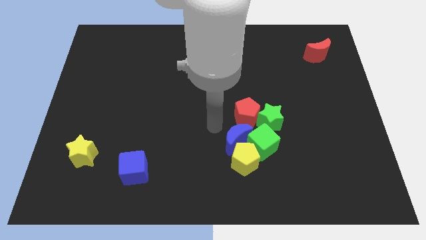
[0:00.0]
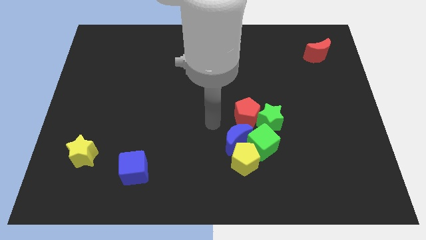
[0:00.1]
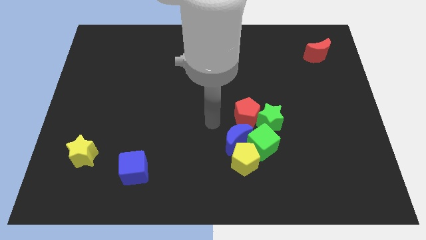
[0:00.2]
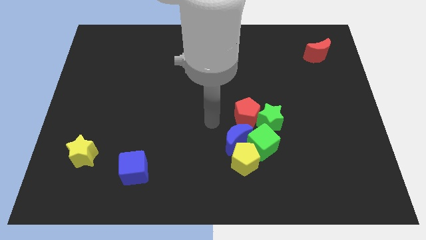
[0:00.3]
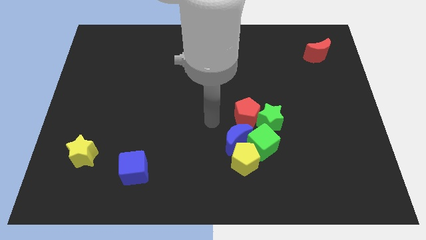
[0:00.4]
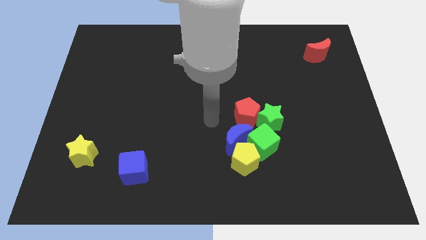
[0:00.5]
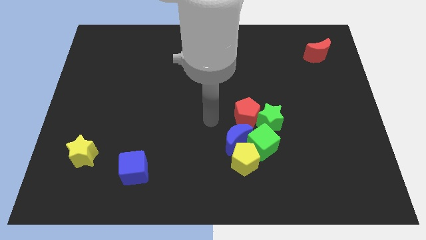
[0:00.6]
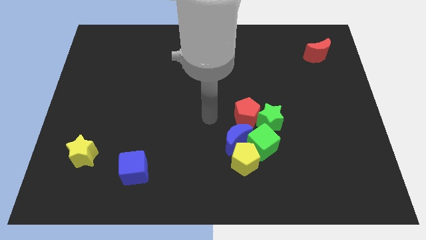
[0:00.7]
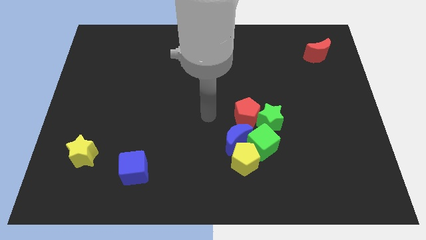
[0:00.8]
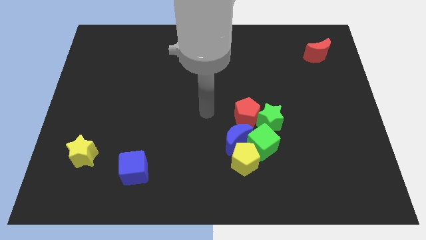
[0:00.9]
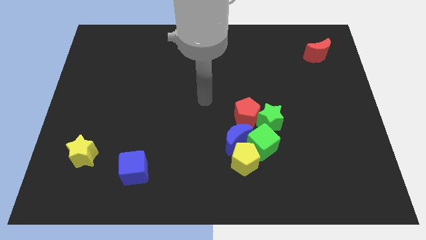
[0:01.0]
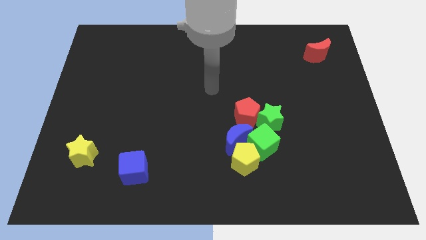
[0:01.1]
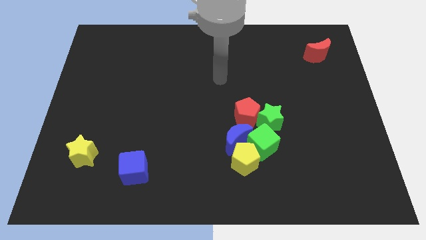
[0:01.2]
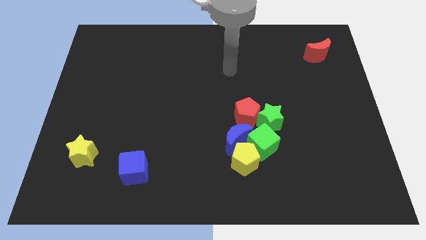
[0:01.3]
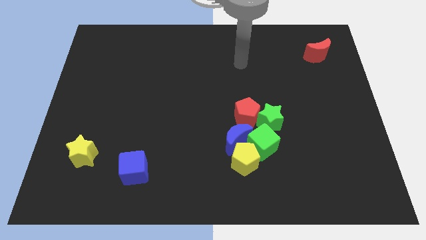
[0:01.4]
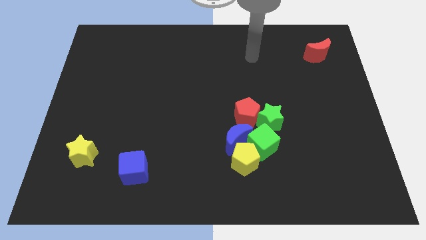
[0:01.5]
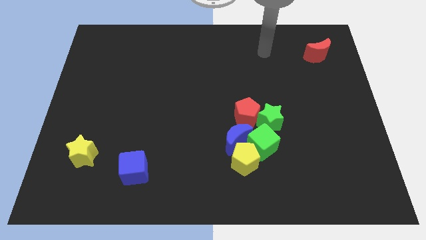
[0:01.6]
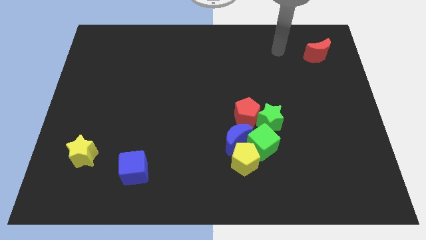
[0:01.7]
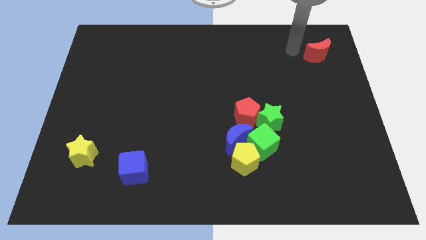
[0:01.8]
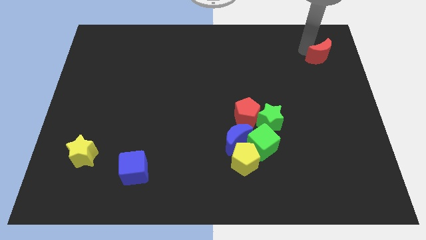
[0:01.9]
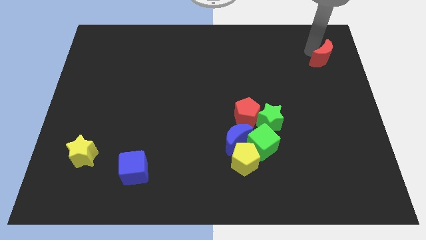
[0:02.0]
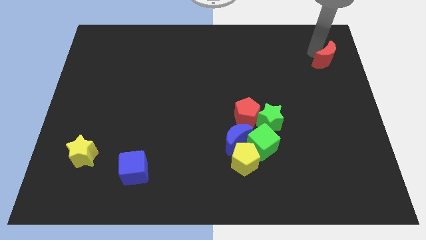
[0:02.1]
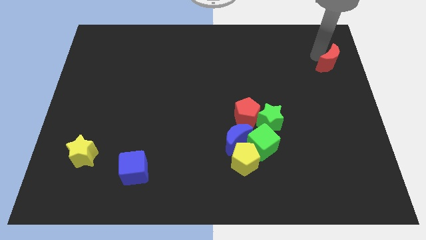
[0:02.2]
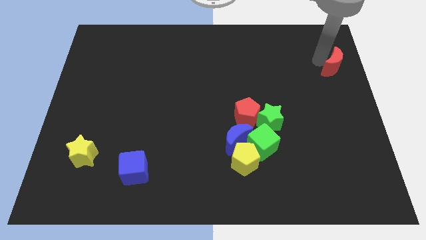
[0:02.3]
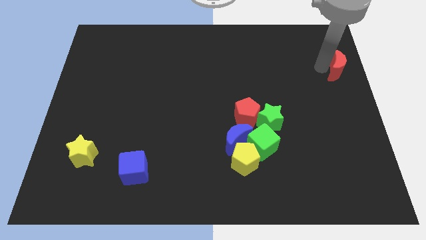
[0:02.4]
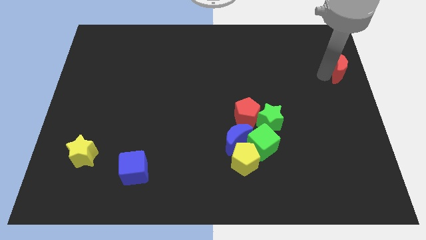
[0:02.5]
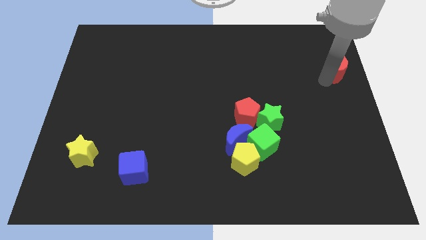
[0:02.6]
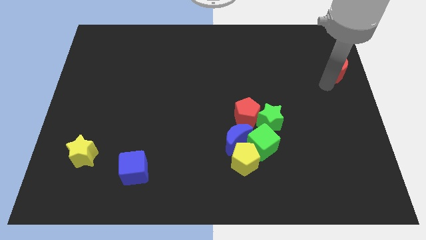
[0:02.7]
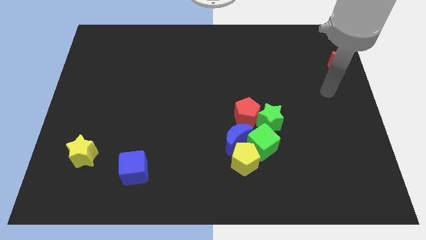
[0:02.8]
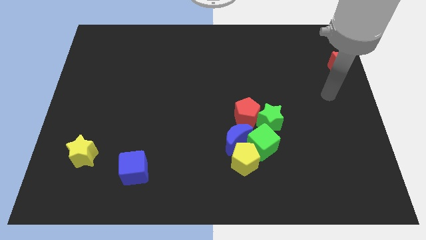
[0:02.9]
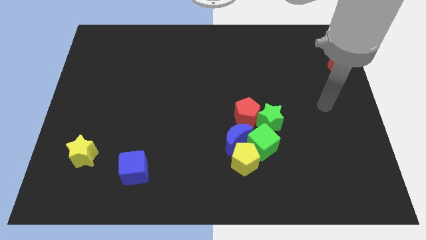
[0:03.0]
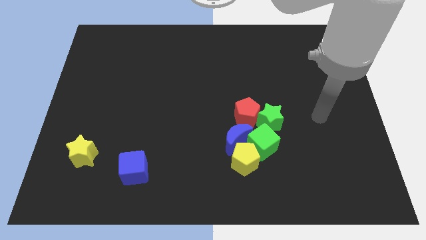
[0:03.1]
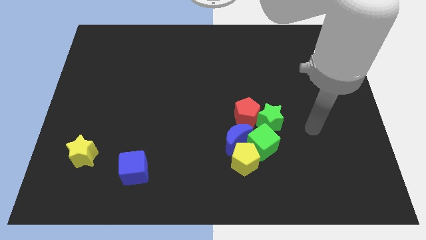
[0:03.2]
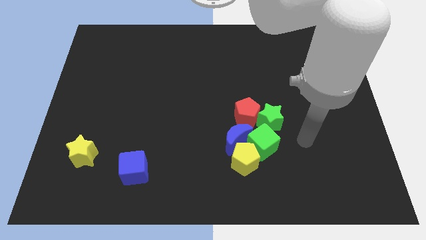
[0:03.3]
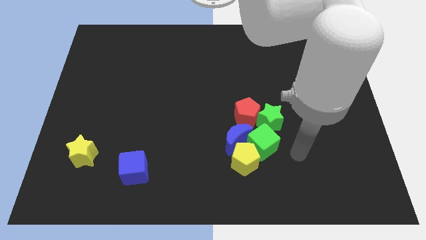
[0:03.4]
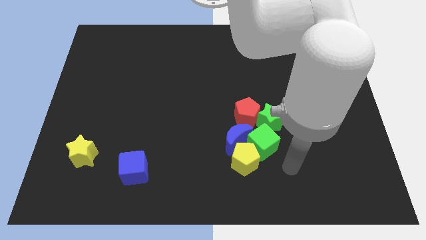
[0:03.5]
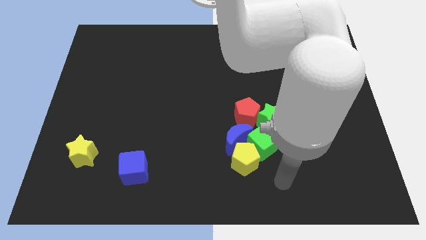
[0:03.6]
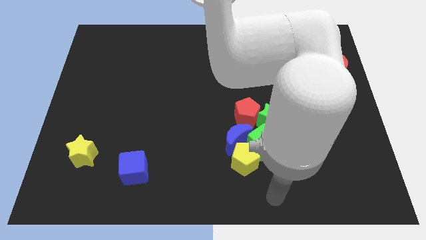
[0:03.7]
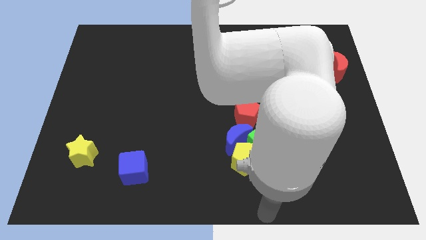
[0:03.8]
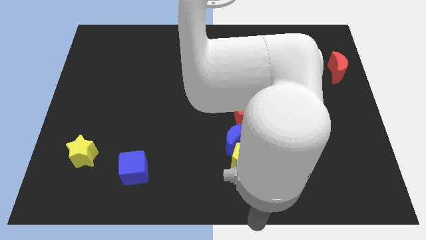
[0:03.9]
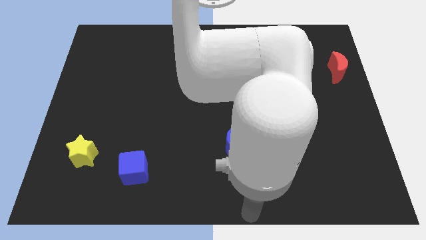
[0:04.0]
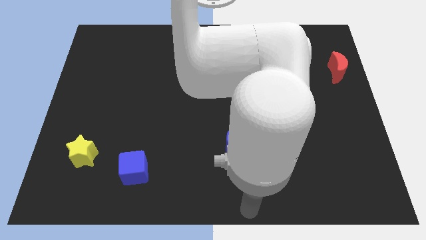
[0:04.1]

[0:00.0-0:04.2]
move your arm to the bottom center

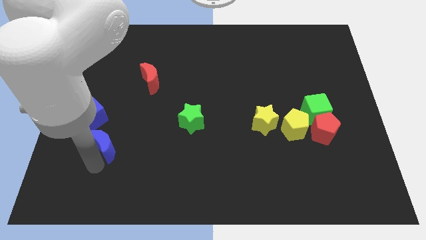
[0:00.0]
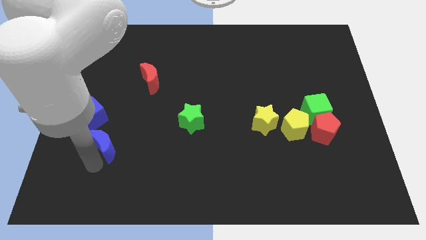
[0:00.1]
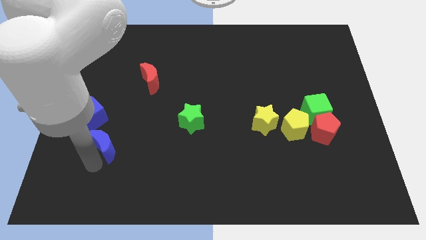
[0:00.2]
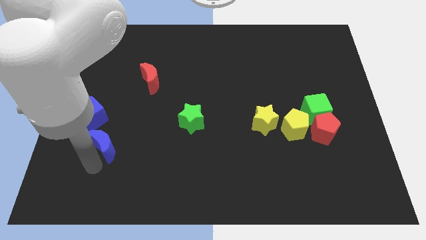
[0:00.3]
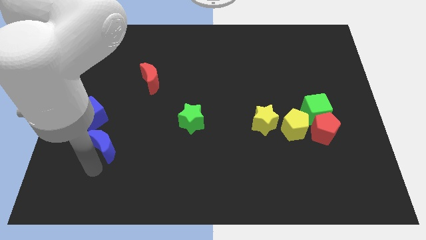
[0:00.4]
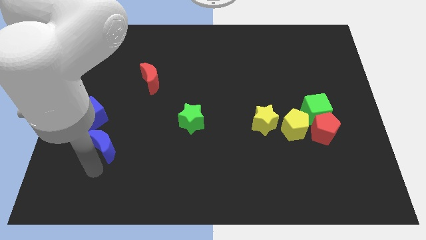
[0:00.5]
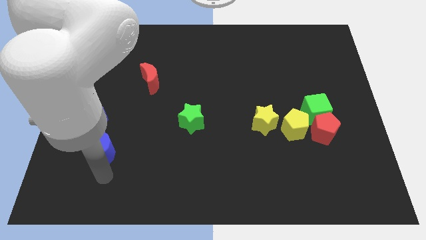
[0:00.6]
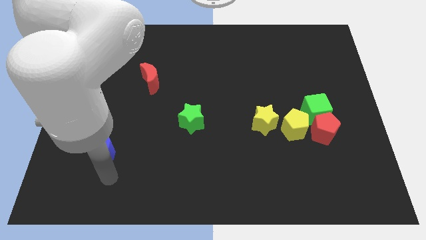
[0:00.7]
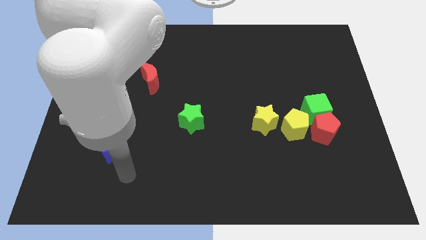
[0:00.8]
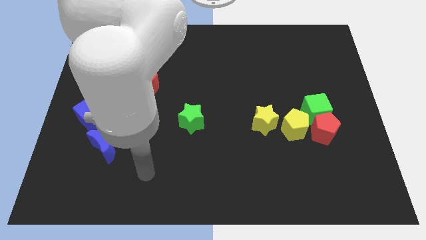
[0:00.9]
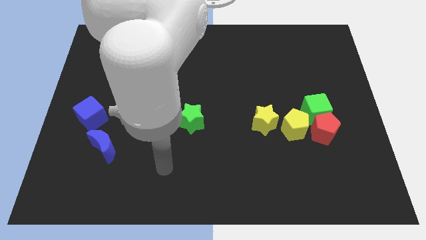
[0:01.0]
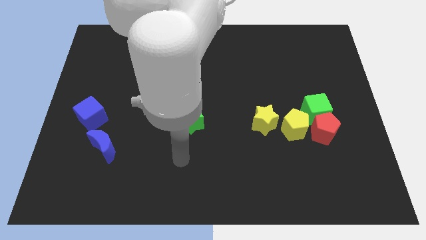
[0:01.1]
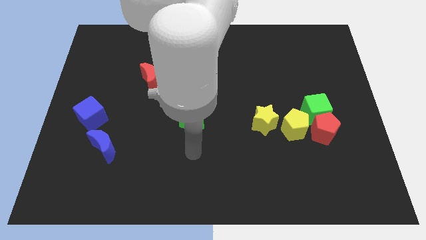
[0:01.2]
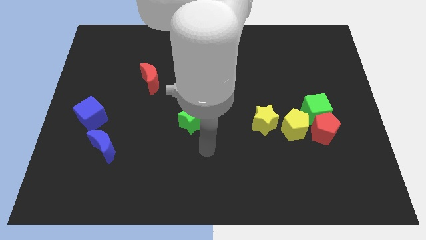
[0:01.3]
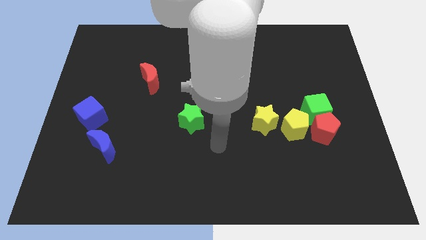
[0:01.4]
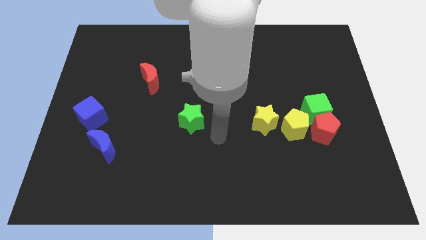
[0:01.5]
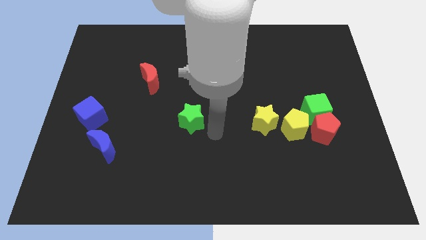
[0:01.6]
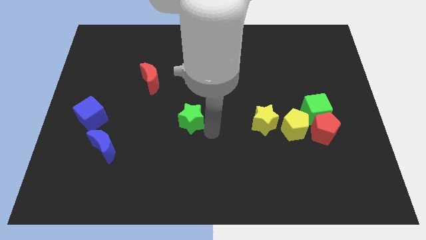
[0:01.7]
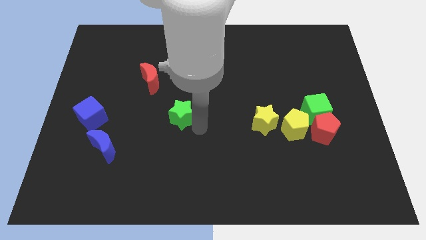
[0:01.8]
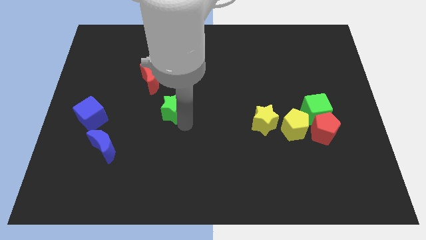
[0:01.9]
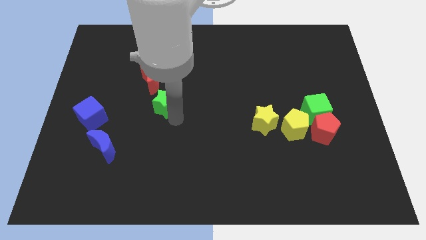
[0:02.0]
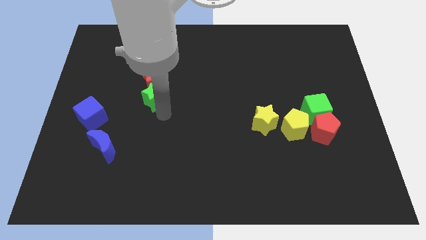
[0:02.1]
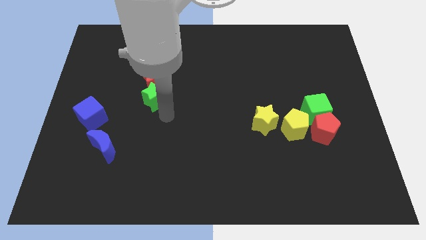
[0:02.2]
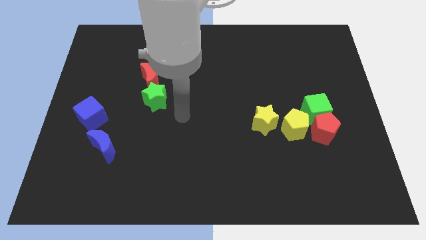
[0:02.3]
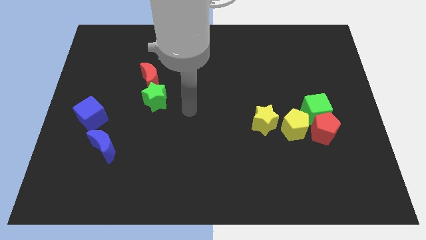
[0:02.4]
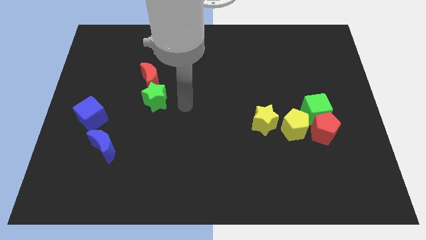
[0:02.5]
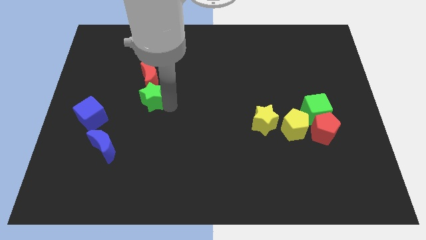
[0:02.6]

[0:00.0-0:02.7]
move the green star below the red moon

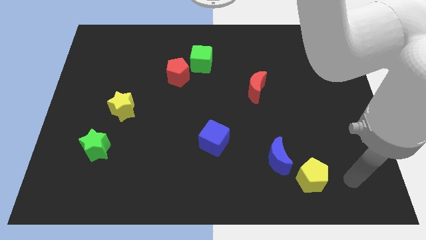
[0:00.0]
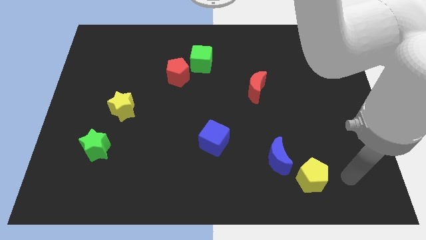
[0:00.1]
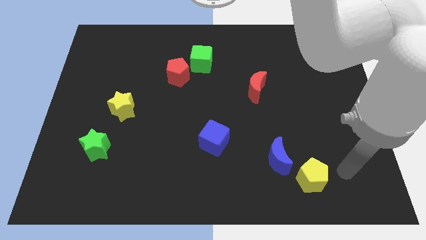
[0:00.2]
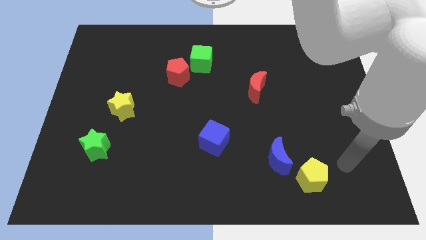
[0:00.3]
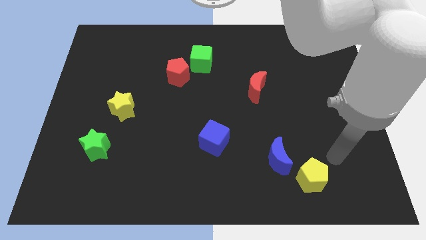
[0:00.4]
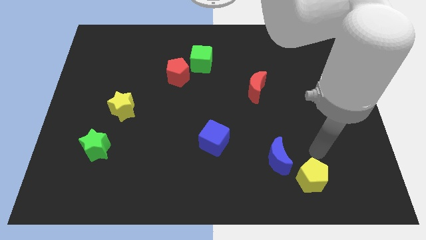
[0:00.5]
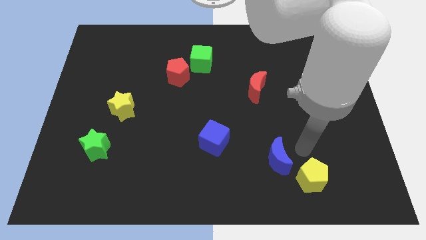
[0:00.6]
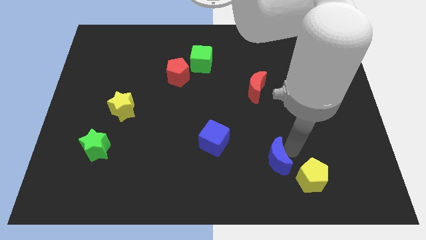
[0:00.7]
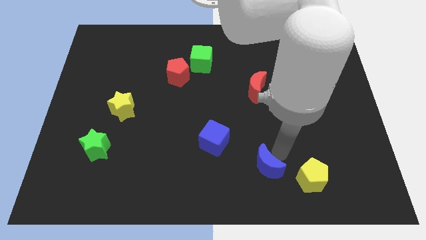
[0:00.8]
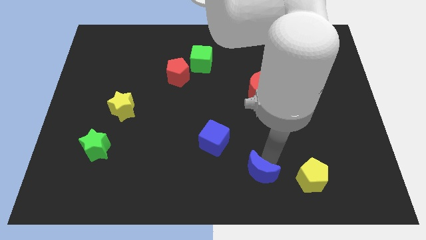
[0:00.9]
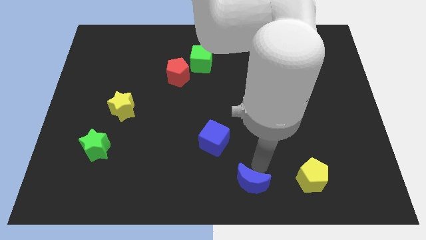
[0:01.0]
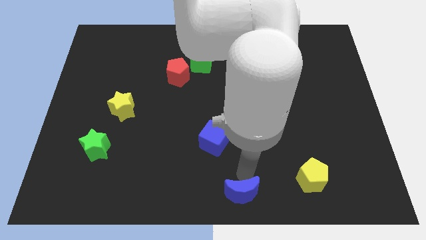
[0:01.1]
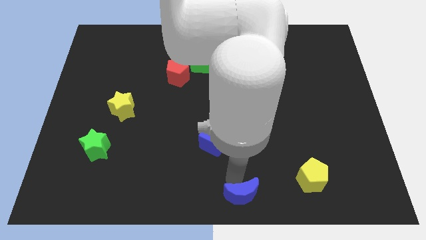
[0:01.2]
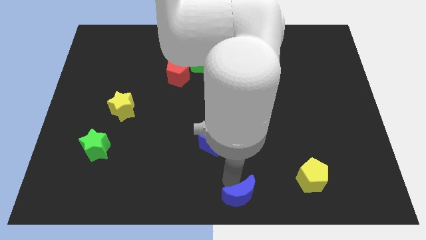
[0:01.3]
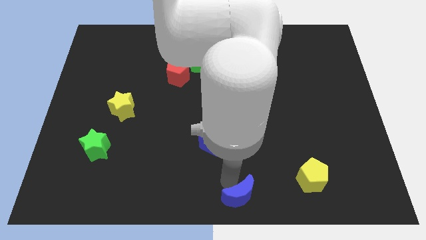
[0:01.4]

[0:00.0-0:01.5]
place blue moon vertical to yellow pentagon

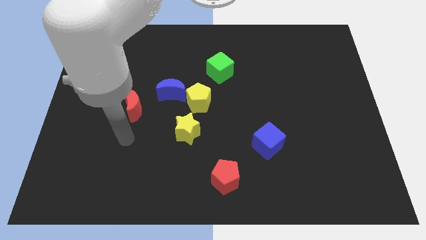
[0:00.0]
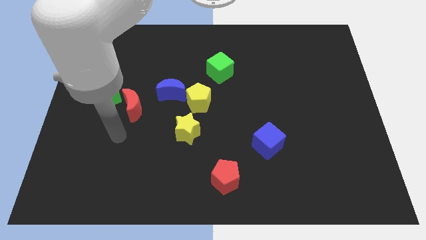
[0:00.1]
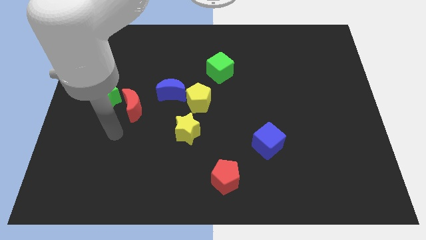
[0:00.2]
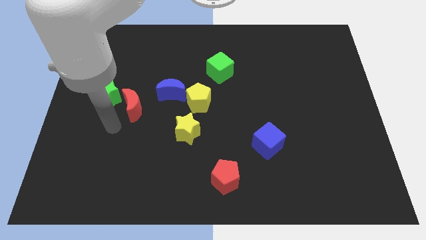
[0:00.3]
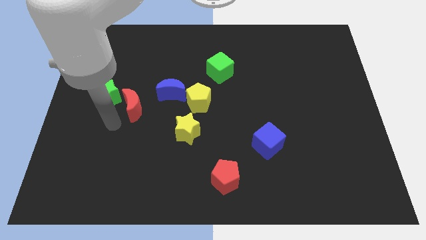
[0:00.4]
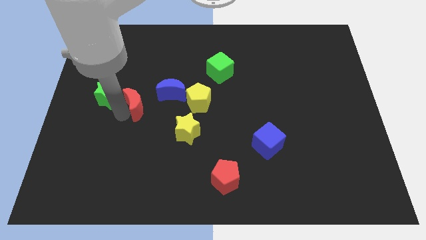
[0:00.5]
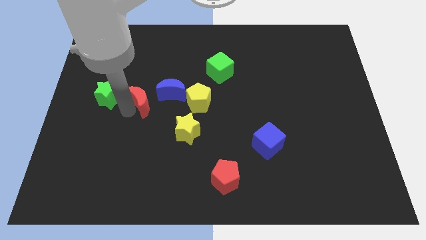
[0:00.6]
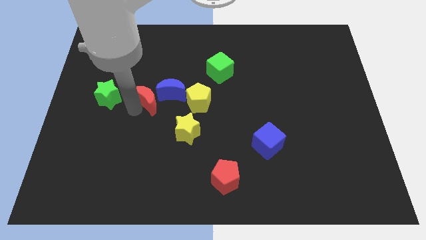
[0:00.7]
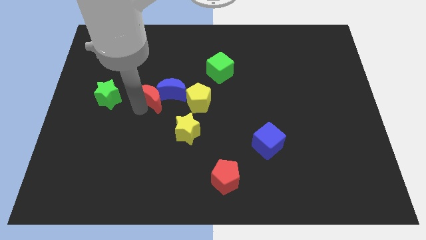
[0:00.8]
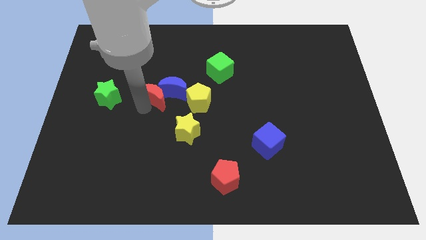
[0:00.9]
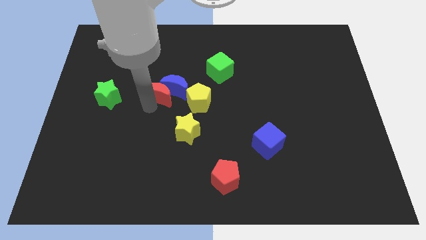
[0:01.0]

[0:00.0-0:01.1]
push red moon in to blue moon
